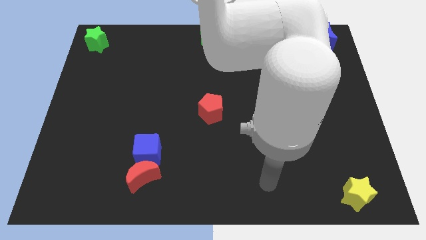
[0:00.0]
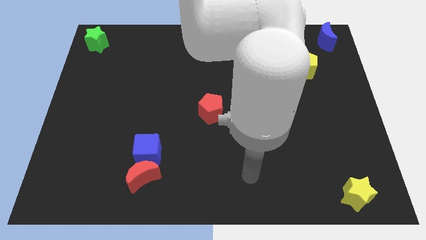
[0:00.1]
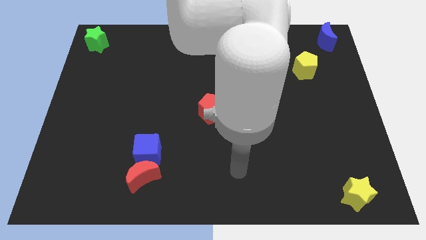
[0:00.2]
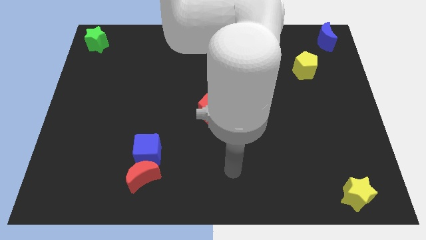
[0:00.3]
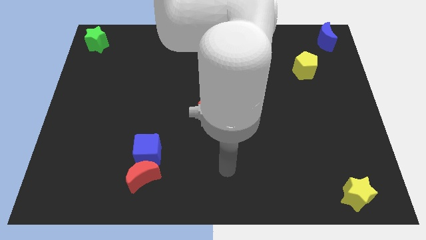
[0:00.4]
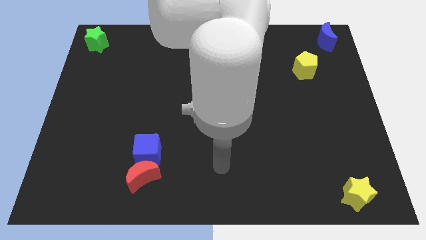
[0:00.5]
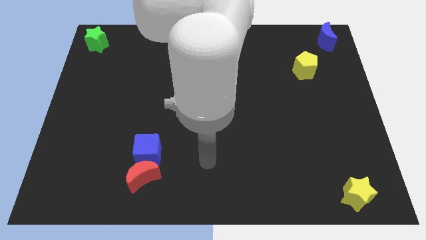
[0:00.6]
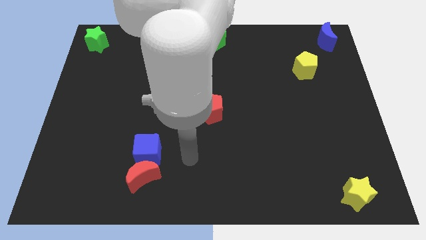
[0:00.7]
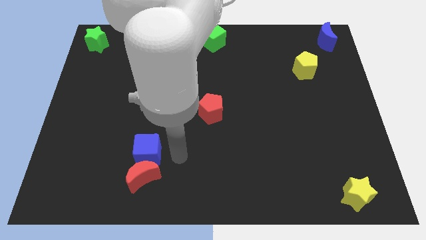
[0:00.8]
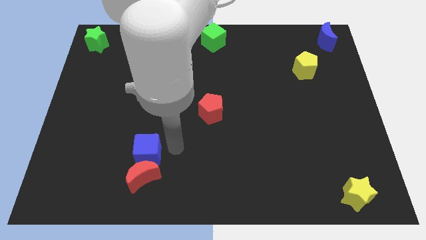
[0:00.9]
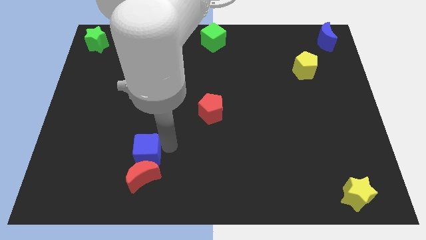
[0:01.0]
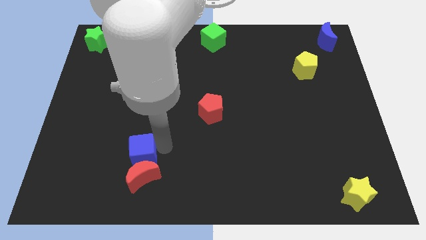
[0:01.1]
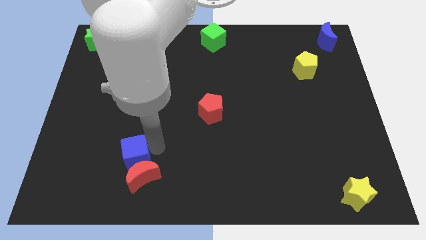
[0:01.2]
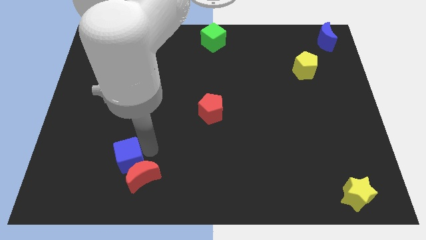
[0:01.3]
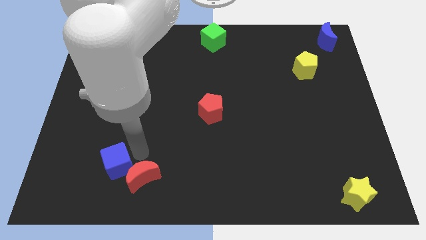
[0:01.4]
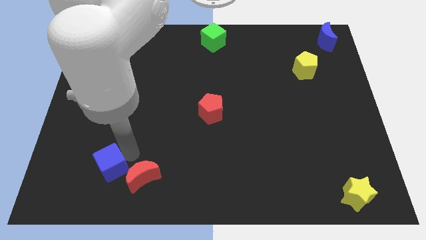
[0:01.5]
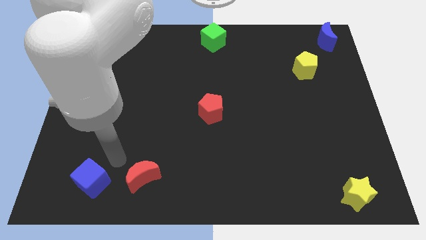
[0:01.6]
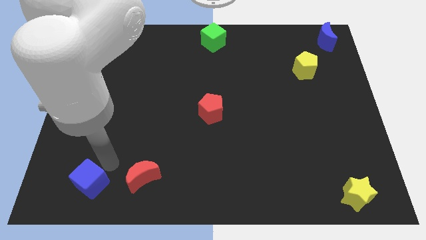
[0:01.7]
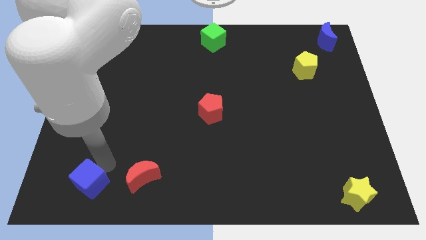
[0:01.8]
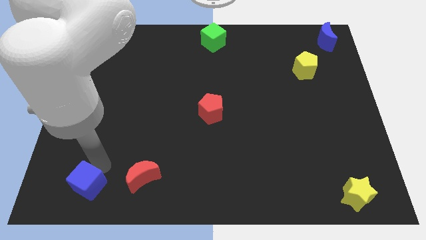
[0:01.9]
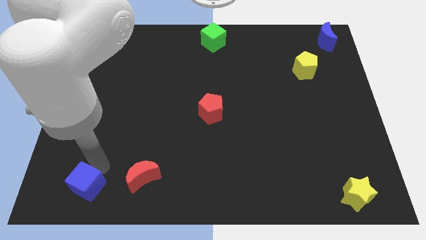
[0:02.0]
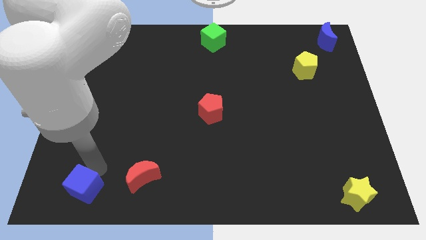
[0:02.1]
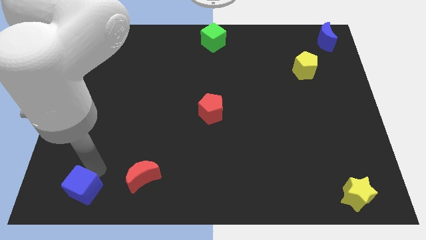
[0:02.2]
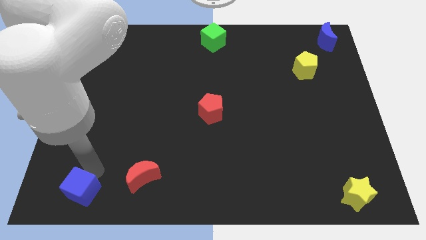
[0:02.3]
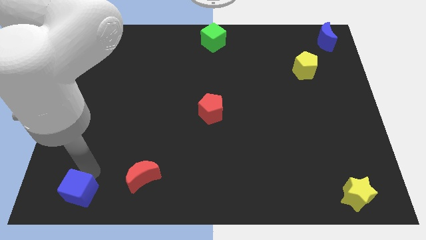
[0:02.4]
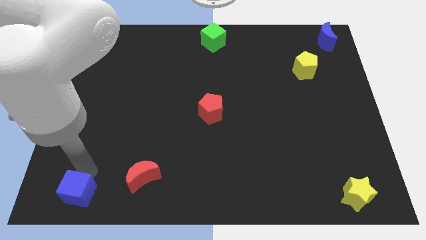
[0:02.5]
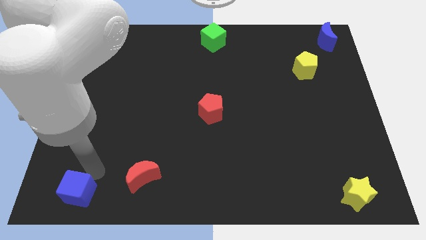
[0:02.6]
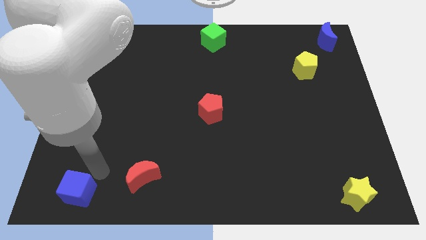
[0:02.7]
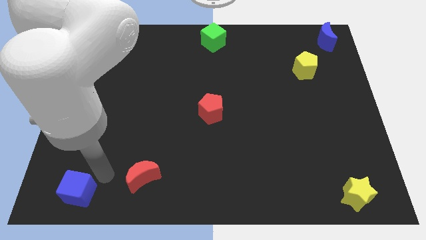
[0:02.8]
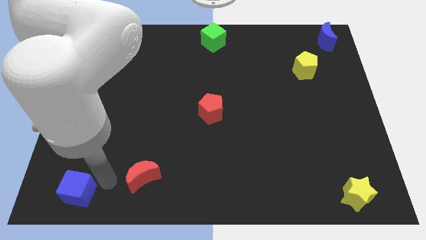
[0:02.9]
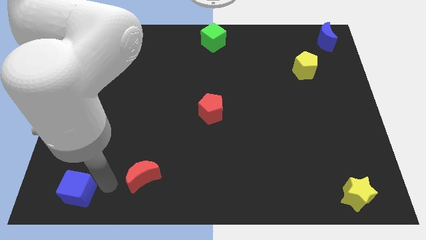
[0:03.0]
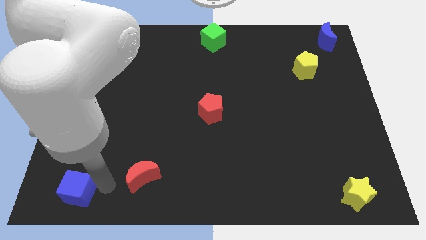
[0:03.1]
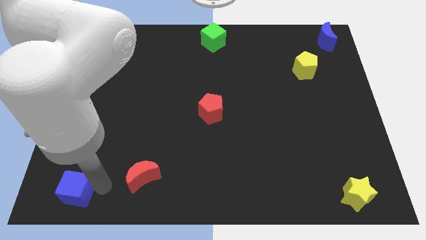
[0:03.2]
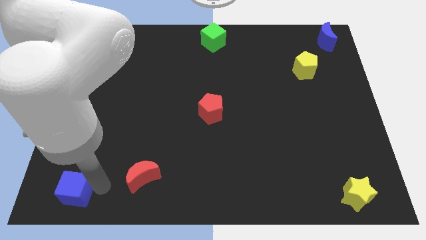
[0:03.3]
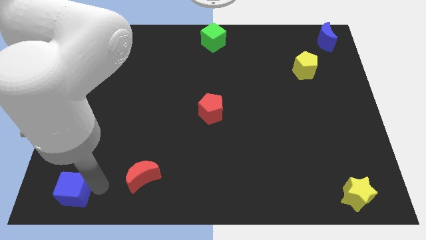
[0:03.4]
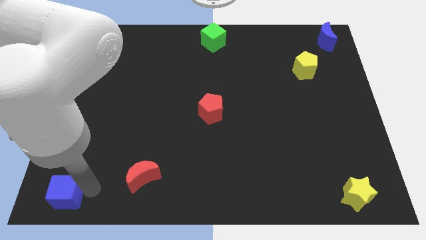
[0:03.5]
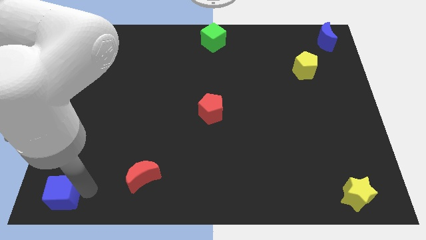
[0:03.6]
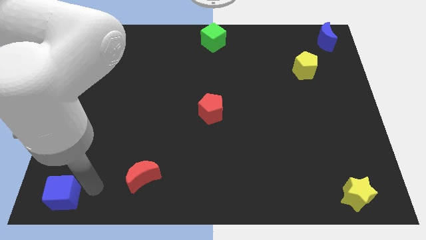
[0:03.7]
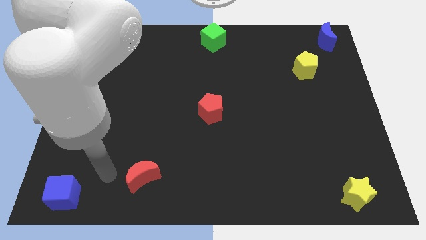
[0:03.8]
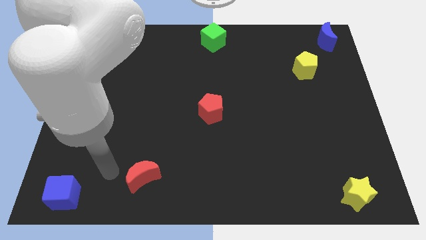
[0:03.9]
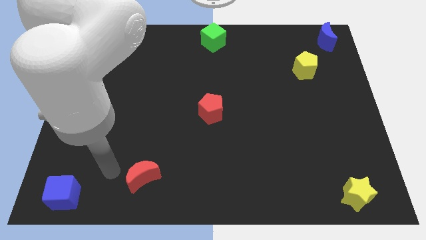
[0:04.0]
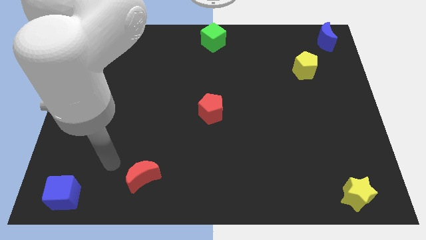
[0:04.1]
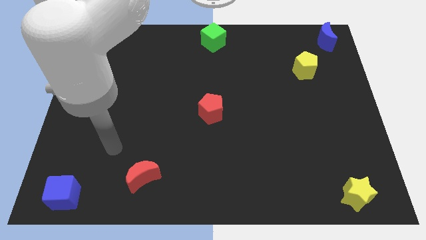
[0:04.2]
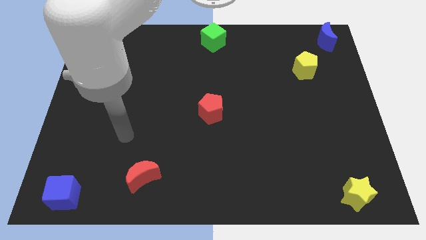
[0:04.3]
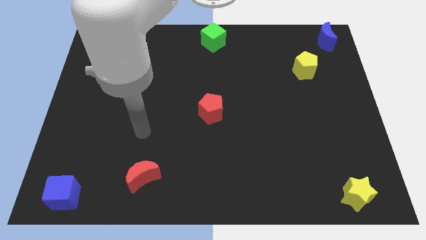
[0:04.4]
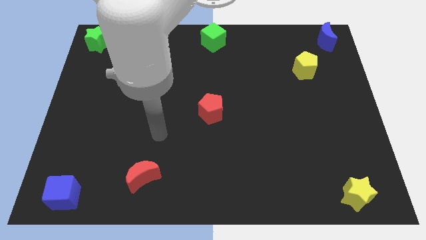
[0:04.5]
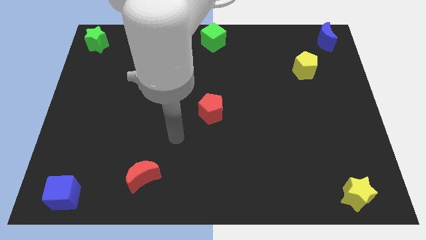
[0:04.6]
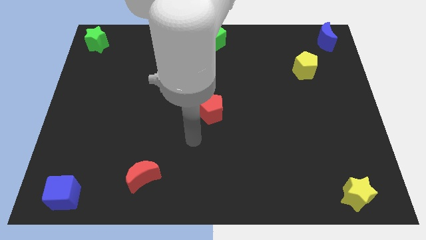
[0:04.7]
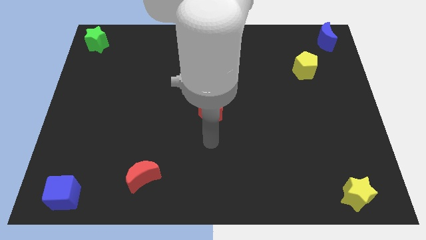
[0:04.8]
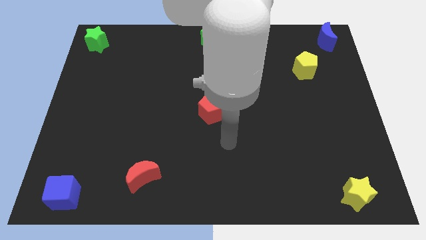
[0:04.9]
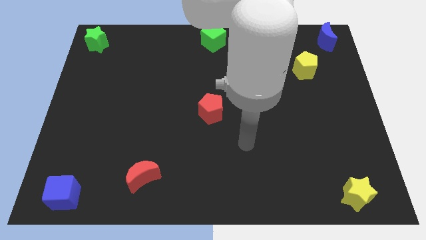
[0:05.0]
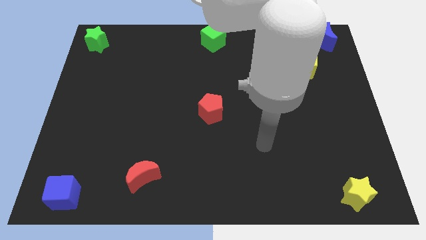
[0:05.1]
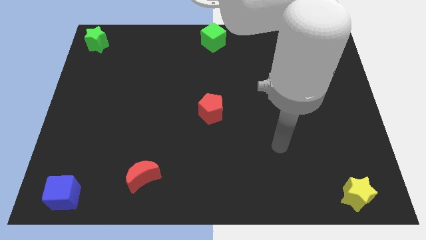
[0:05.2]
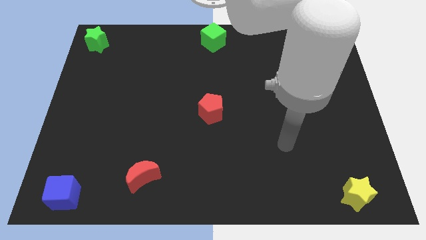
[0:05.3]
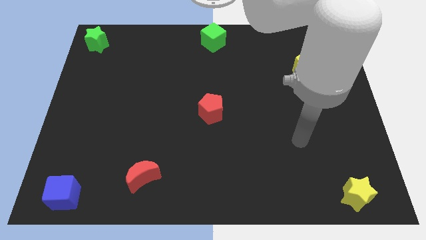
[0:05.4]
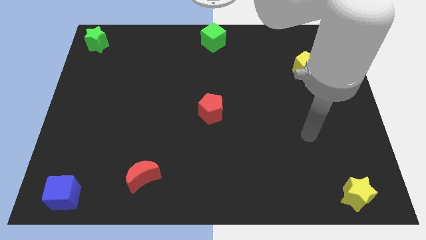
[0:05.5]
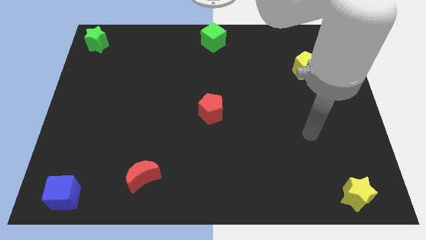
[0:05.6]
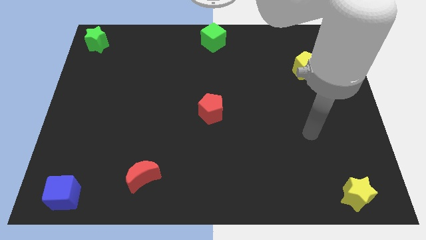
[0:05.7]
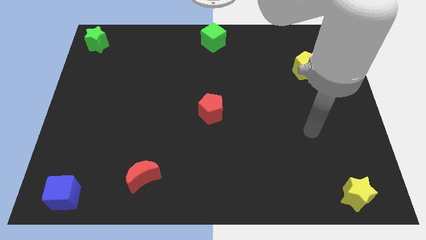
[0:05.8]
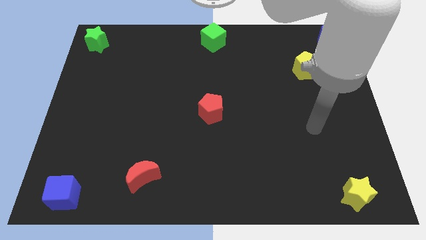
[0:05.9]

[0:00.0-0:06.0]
move the blue cube to the bottom left corner of the board

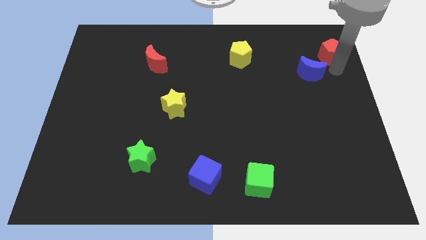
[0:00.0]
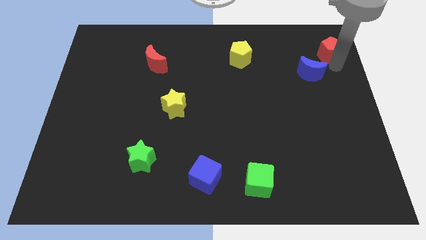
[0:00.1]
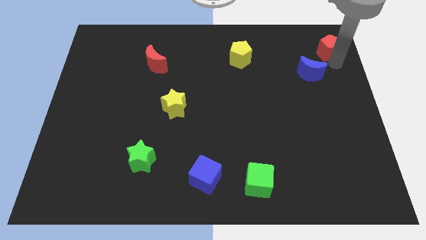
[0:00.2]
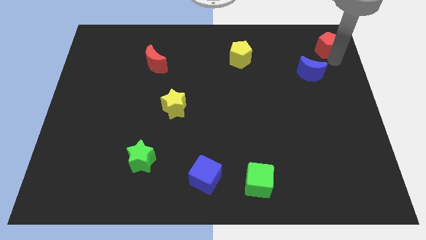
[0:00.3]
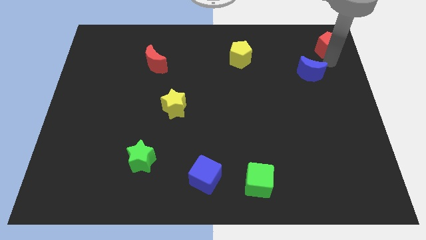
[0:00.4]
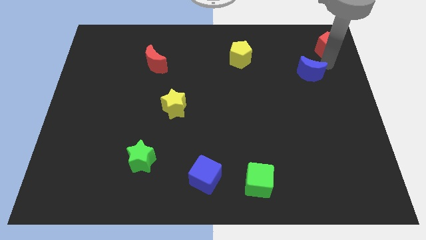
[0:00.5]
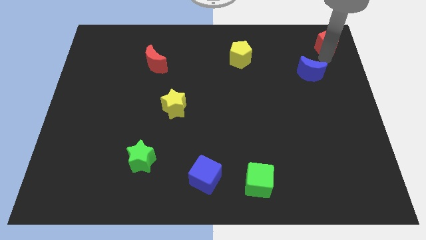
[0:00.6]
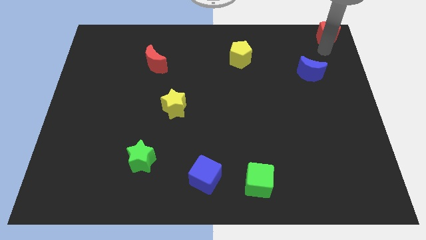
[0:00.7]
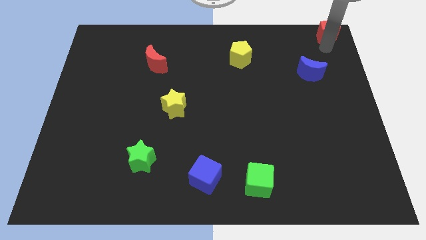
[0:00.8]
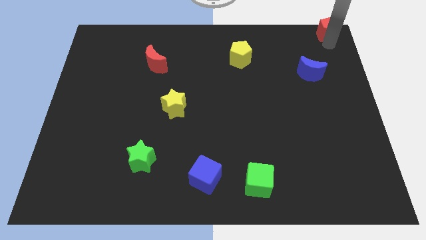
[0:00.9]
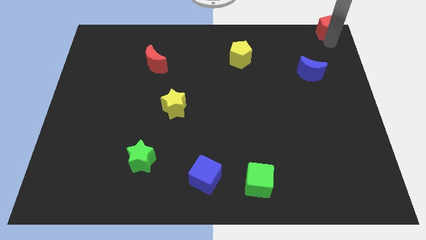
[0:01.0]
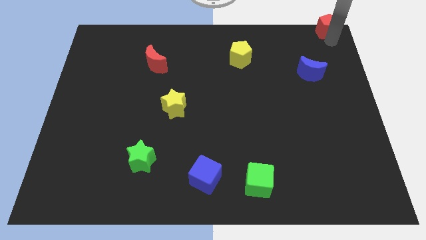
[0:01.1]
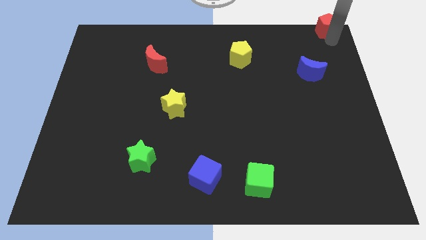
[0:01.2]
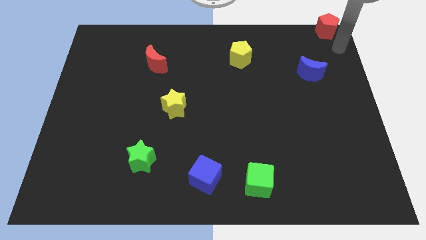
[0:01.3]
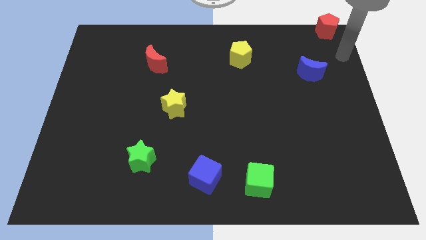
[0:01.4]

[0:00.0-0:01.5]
push red pentagon towards top right side of the board

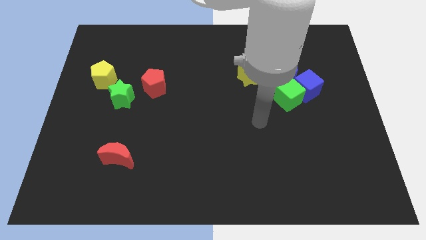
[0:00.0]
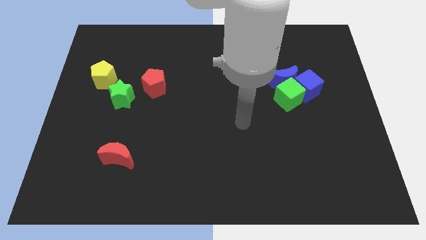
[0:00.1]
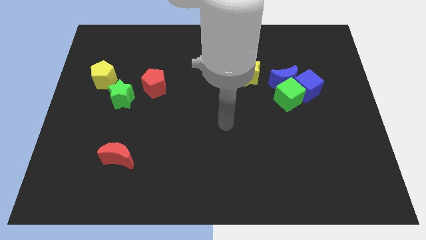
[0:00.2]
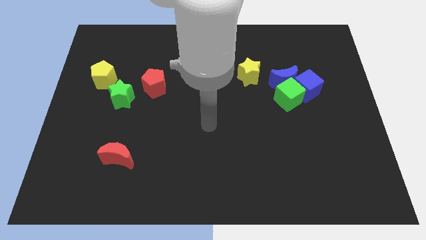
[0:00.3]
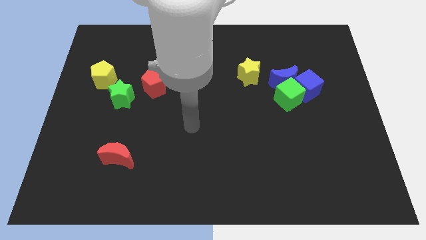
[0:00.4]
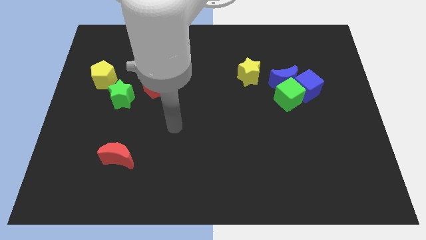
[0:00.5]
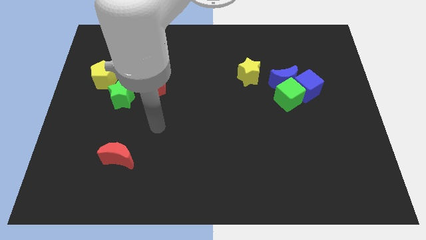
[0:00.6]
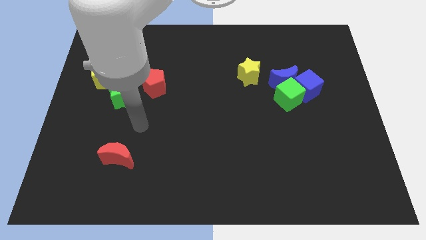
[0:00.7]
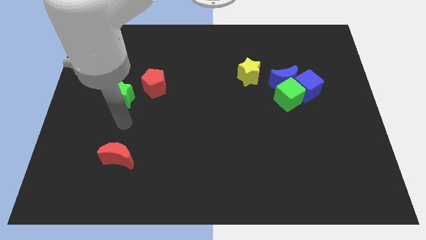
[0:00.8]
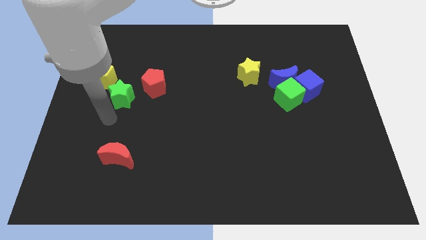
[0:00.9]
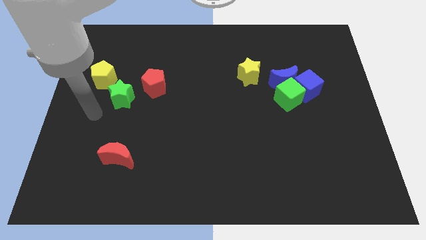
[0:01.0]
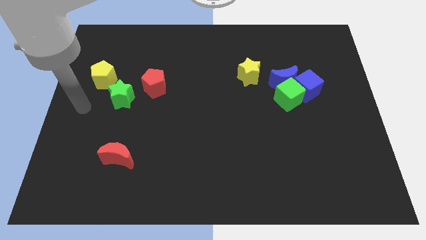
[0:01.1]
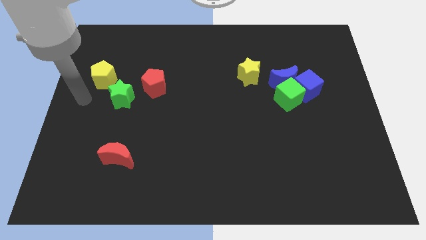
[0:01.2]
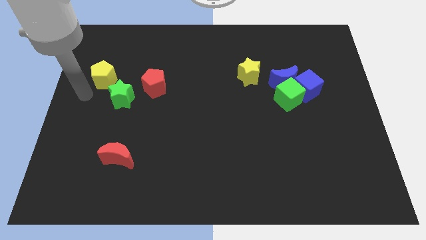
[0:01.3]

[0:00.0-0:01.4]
move your hand away from the green cube

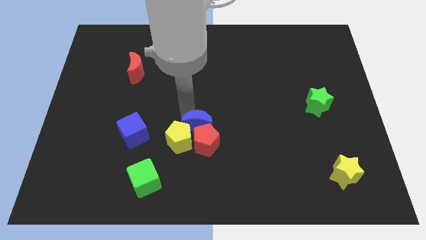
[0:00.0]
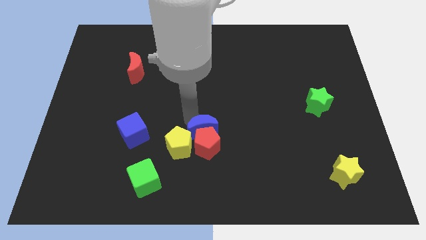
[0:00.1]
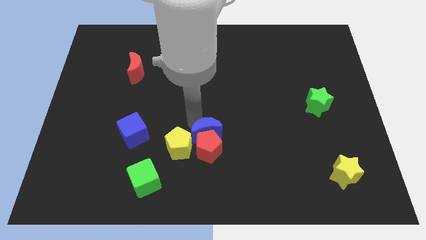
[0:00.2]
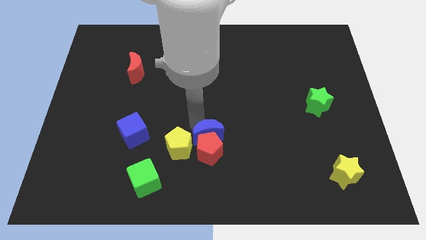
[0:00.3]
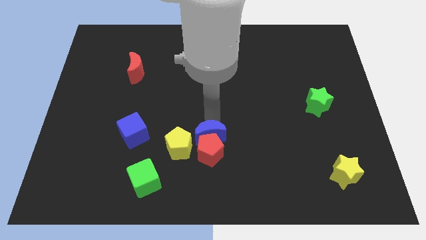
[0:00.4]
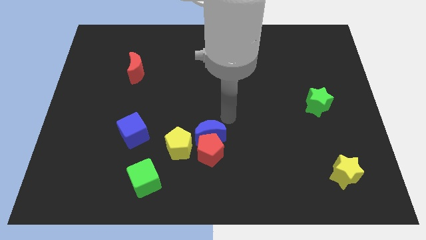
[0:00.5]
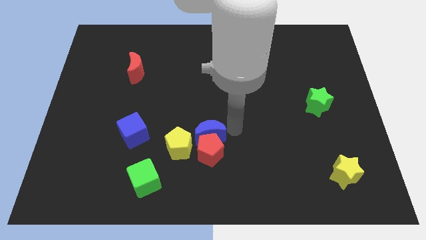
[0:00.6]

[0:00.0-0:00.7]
push the blue crescent into the red pentagon
